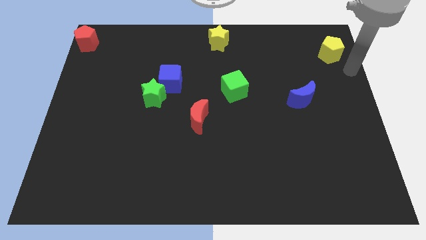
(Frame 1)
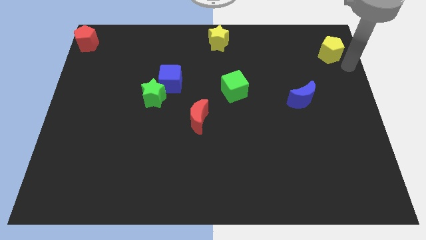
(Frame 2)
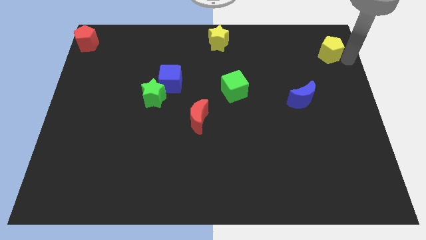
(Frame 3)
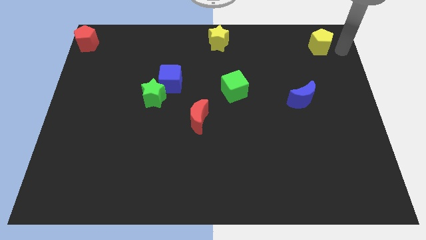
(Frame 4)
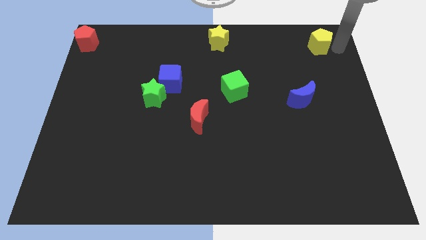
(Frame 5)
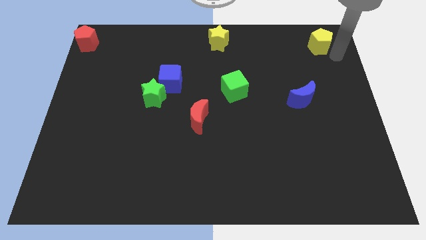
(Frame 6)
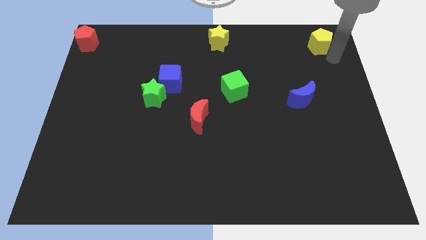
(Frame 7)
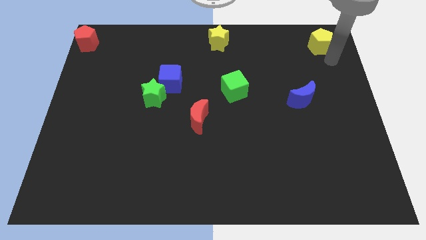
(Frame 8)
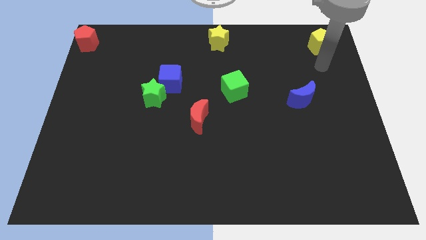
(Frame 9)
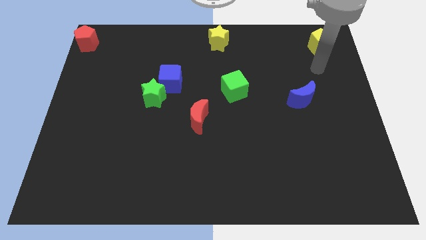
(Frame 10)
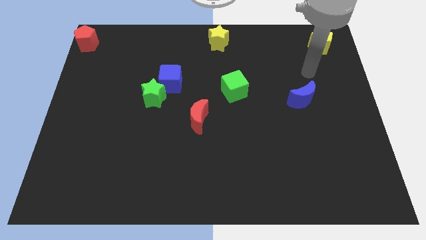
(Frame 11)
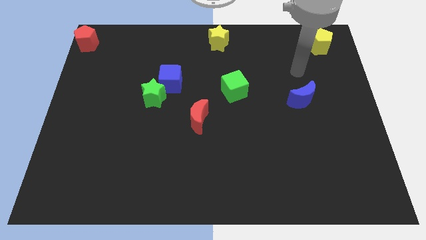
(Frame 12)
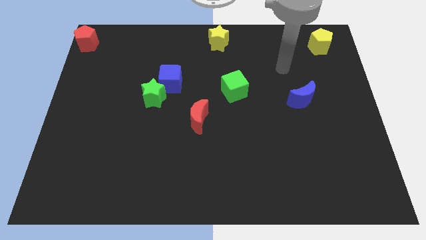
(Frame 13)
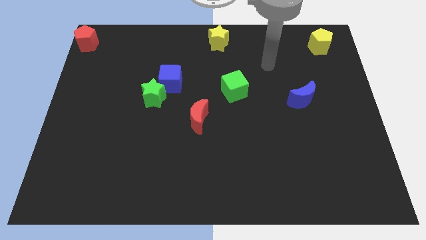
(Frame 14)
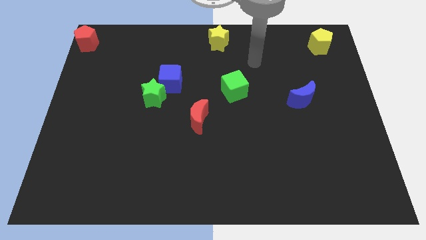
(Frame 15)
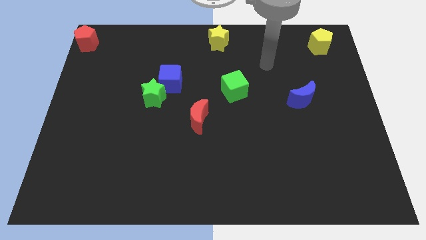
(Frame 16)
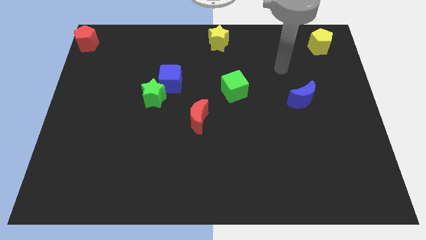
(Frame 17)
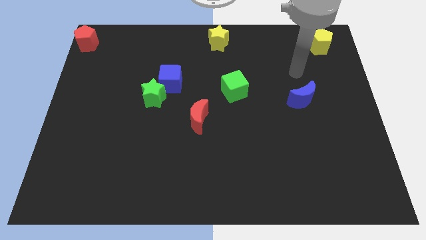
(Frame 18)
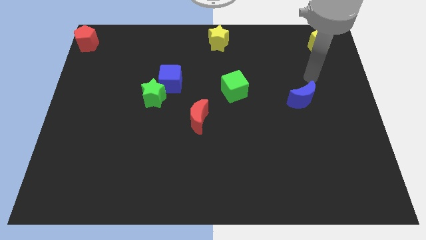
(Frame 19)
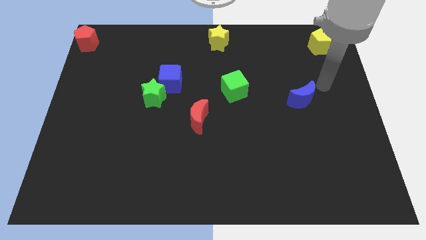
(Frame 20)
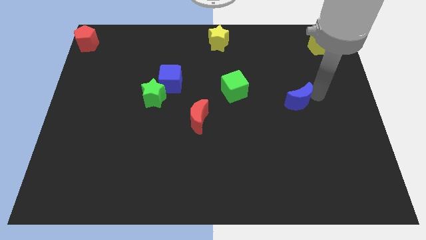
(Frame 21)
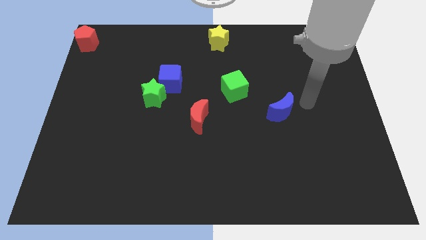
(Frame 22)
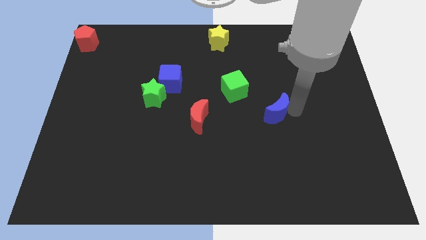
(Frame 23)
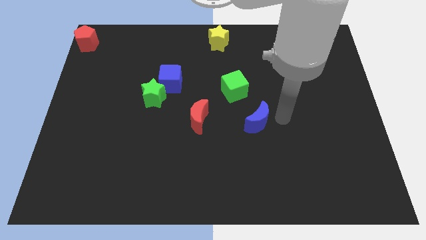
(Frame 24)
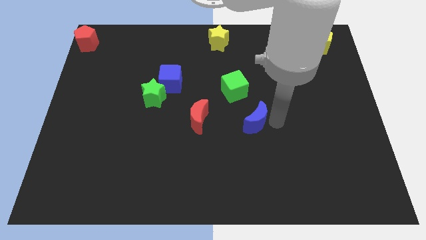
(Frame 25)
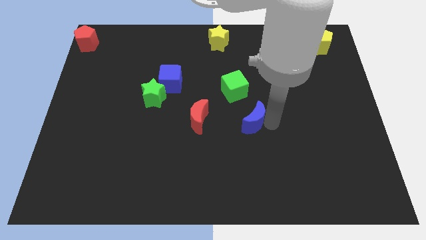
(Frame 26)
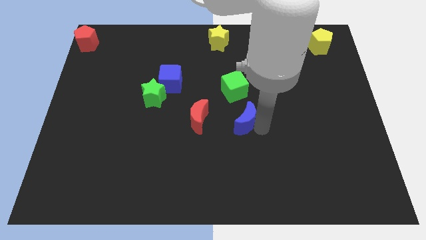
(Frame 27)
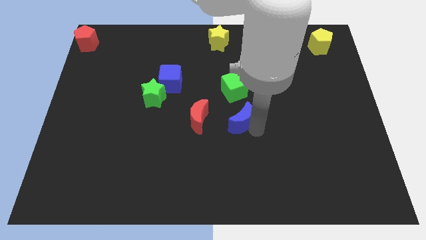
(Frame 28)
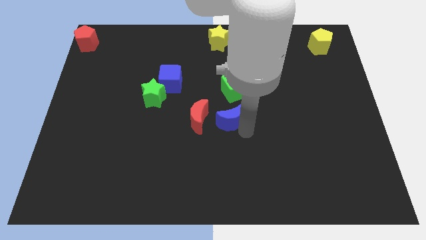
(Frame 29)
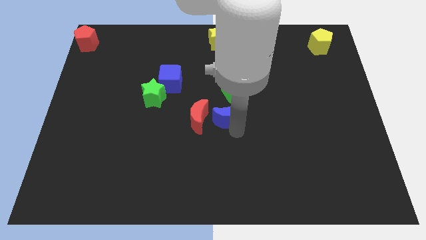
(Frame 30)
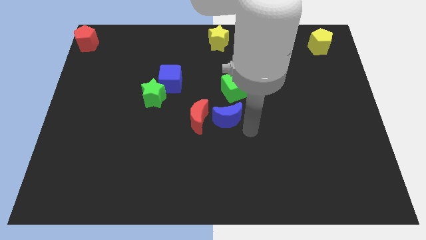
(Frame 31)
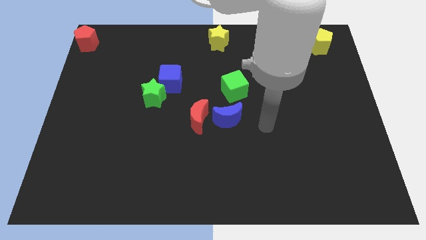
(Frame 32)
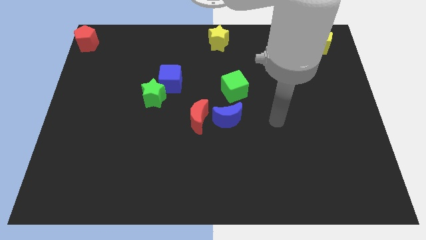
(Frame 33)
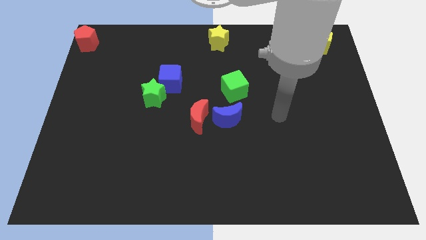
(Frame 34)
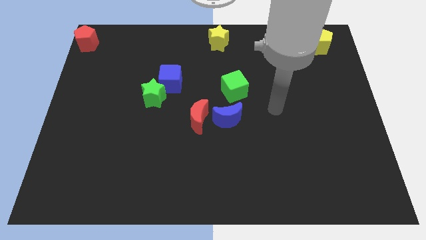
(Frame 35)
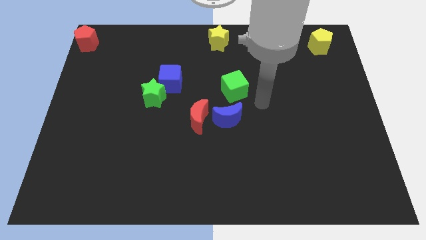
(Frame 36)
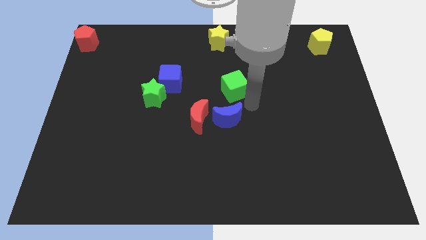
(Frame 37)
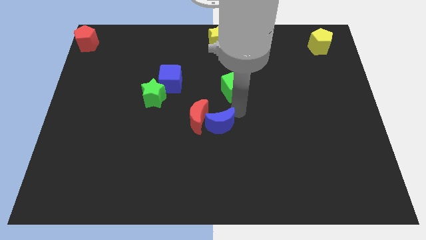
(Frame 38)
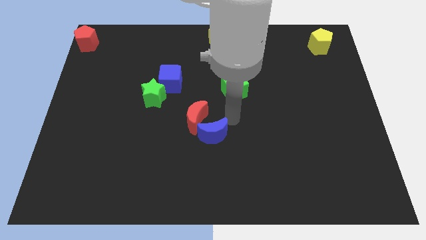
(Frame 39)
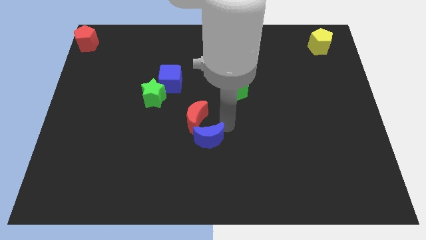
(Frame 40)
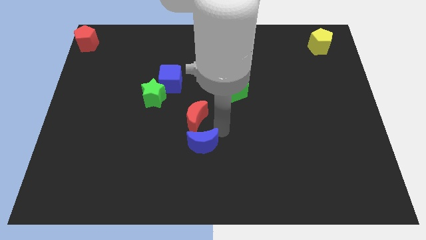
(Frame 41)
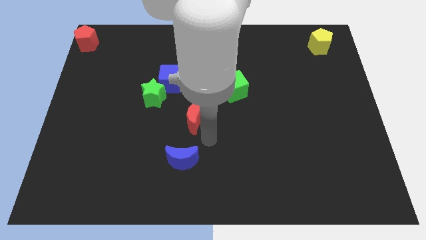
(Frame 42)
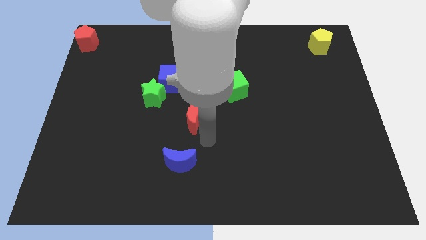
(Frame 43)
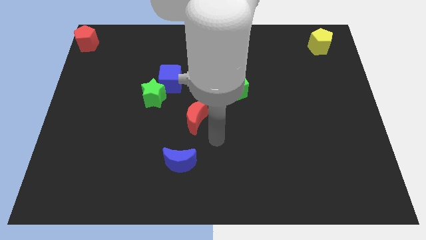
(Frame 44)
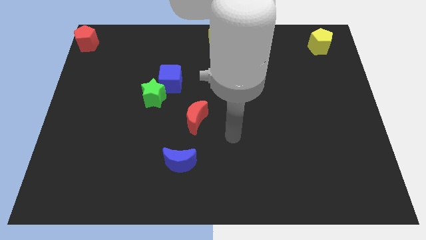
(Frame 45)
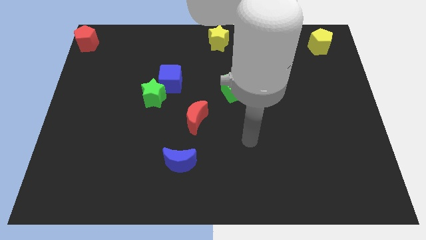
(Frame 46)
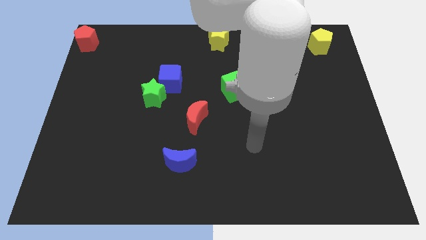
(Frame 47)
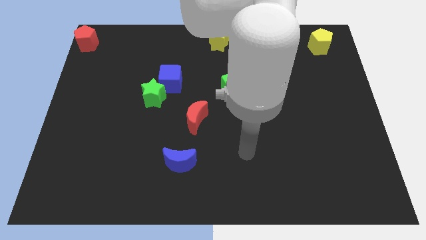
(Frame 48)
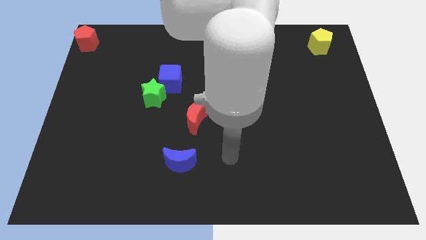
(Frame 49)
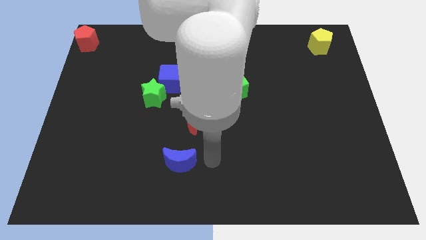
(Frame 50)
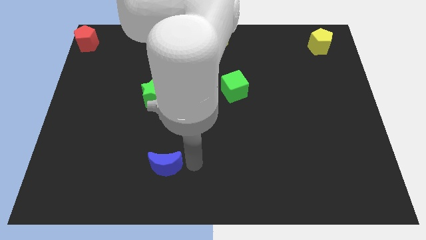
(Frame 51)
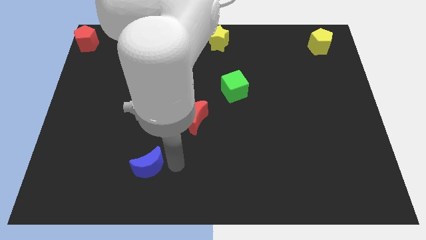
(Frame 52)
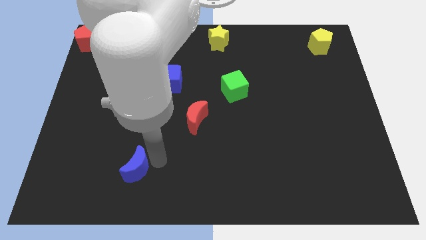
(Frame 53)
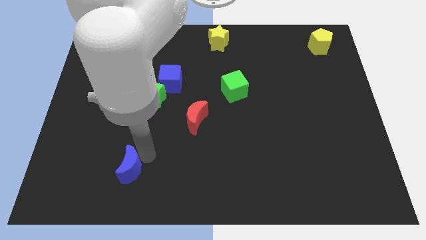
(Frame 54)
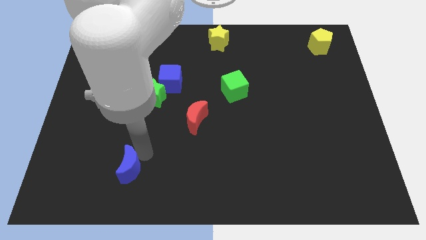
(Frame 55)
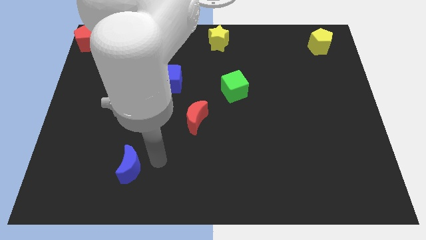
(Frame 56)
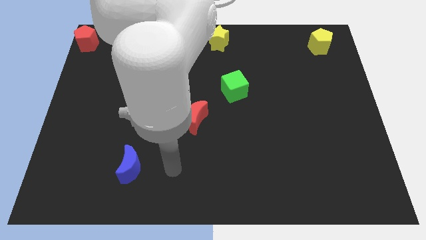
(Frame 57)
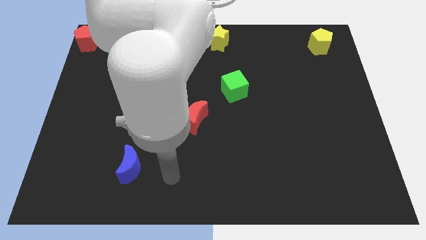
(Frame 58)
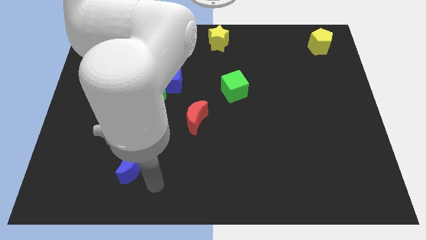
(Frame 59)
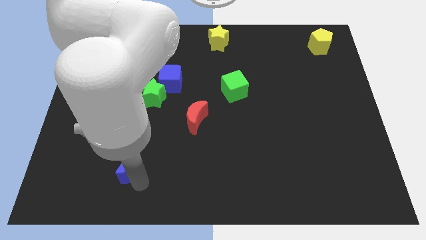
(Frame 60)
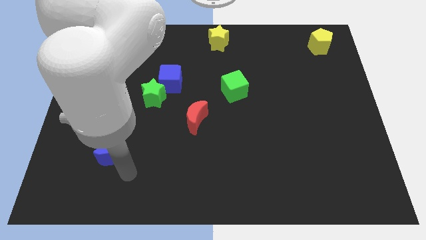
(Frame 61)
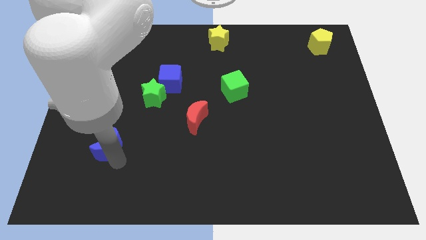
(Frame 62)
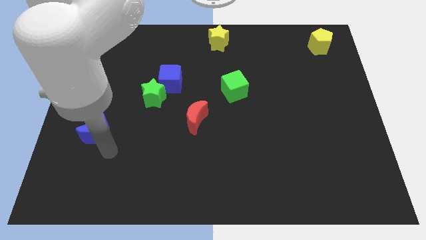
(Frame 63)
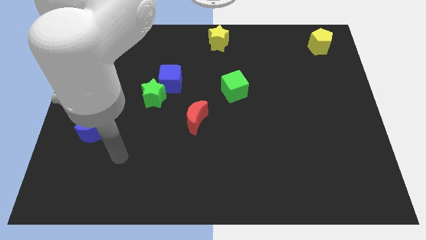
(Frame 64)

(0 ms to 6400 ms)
push the blue moon diagonally to the bottom left of the green star

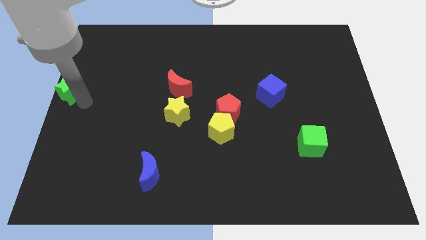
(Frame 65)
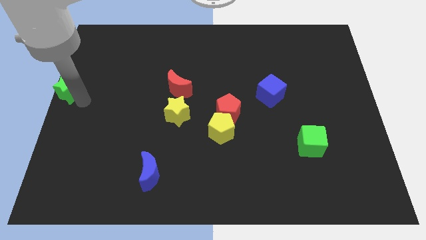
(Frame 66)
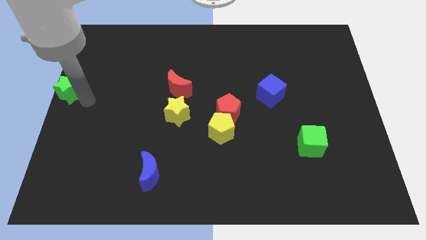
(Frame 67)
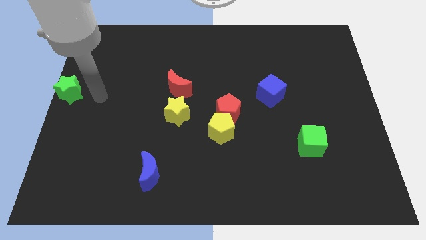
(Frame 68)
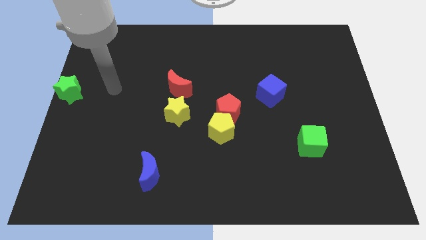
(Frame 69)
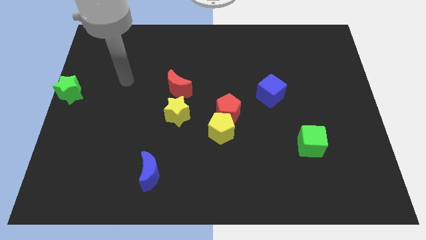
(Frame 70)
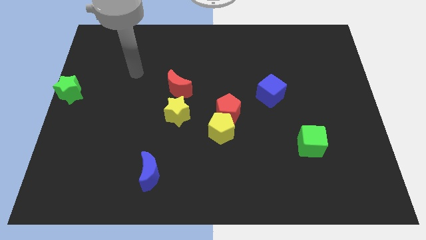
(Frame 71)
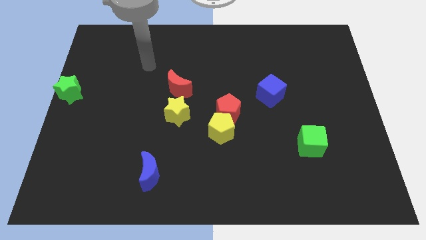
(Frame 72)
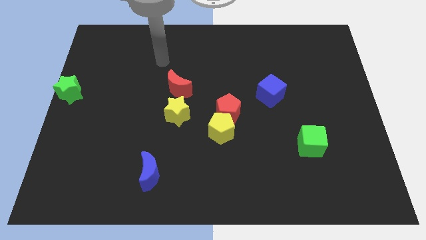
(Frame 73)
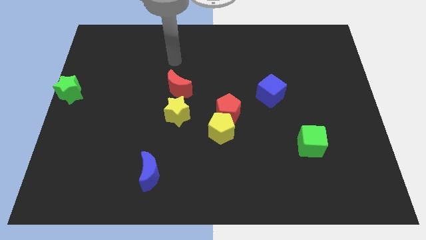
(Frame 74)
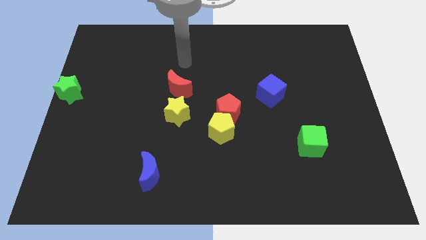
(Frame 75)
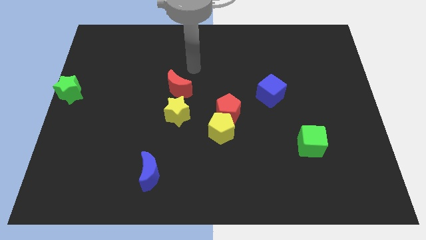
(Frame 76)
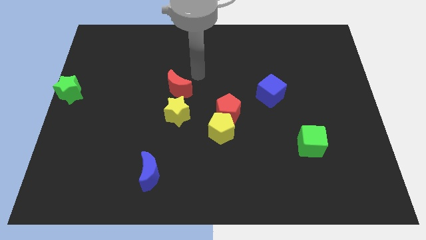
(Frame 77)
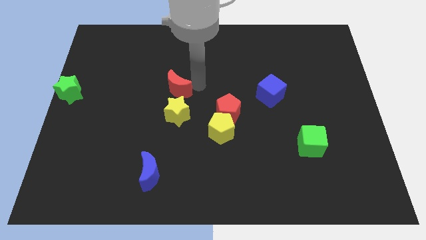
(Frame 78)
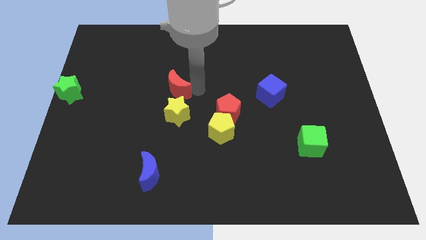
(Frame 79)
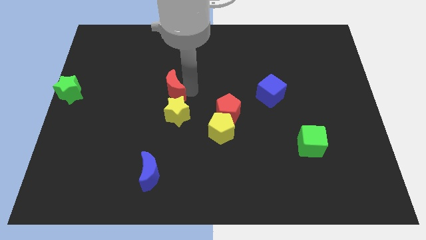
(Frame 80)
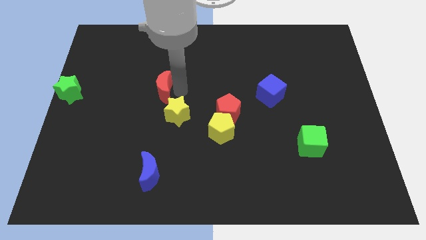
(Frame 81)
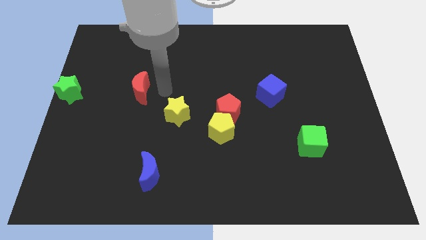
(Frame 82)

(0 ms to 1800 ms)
push the red moon towards the green star

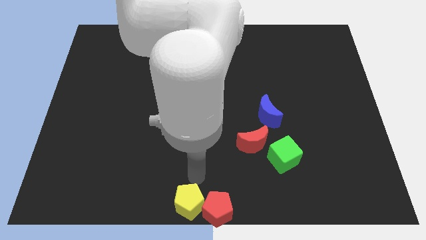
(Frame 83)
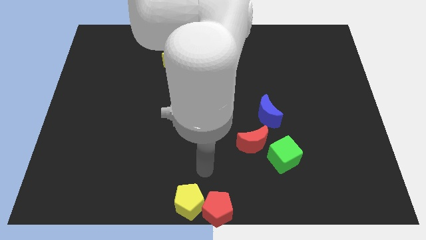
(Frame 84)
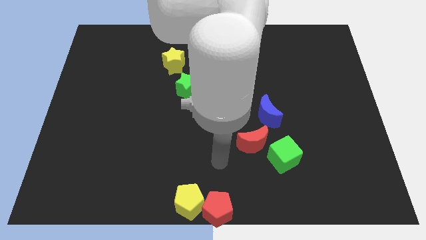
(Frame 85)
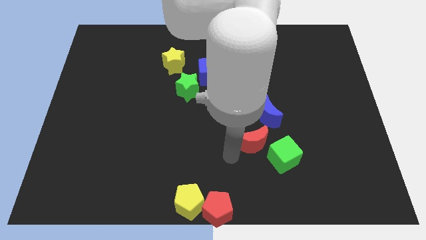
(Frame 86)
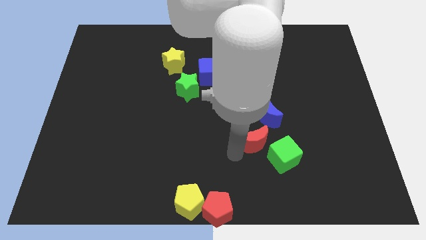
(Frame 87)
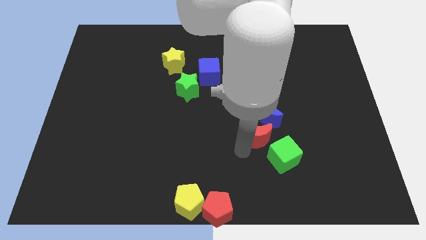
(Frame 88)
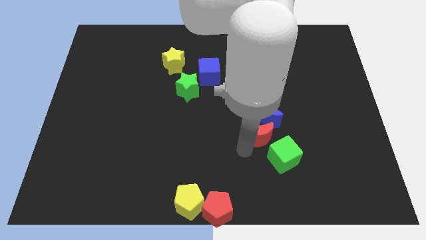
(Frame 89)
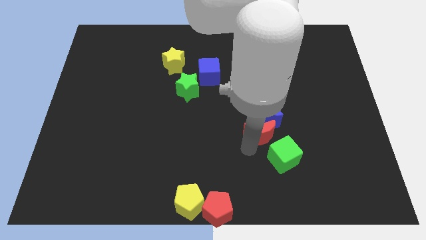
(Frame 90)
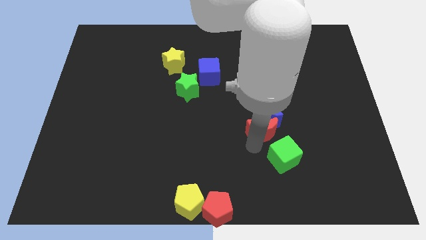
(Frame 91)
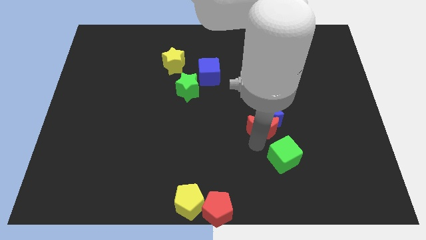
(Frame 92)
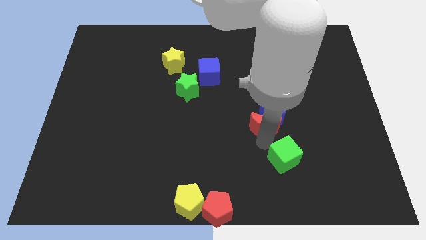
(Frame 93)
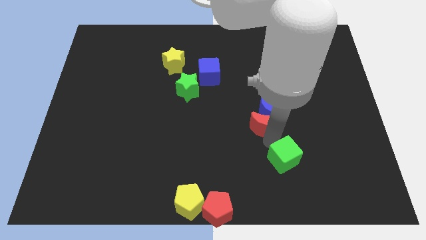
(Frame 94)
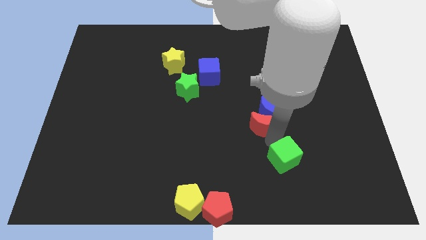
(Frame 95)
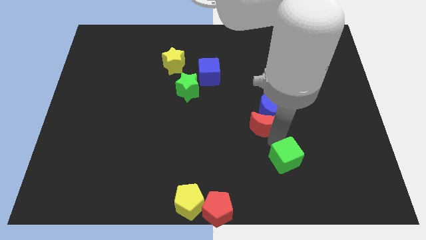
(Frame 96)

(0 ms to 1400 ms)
move the red moon close to the blue moon
